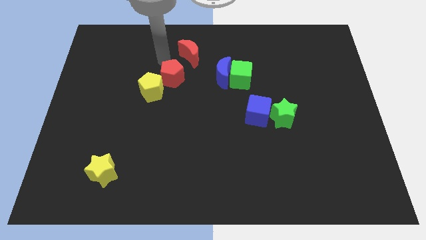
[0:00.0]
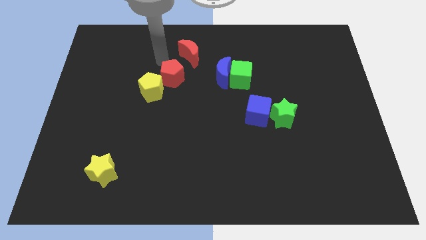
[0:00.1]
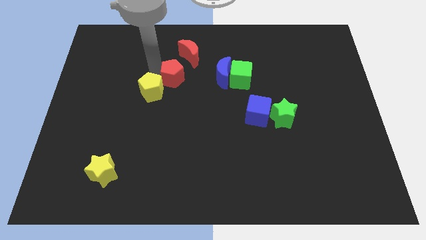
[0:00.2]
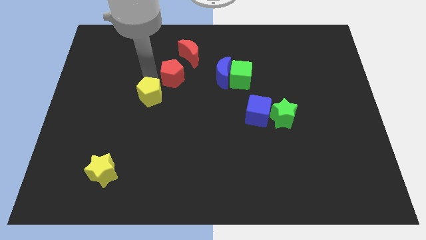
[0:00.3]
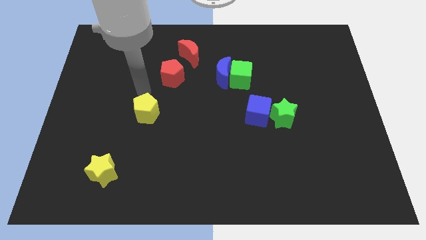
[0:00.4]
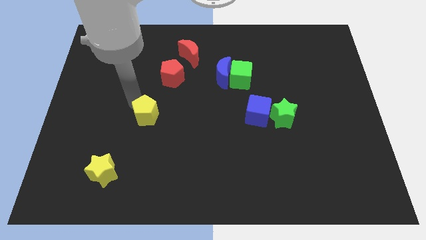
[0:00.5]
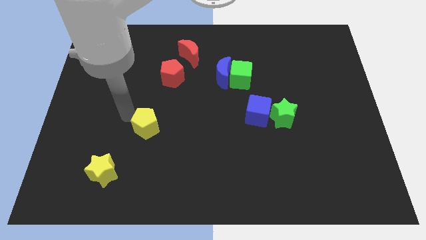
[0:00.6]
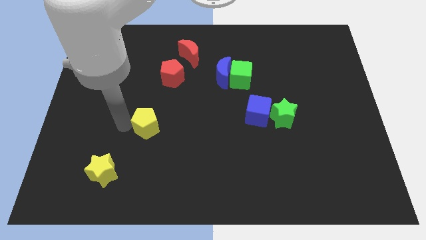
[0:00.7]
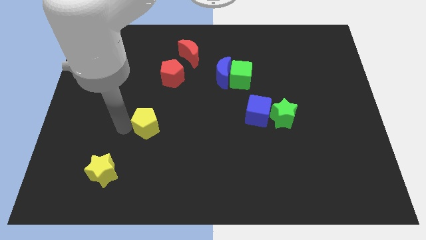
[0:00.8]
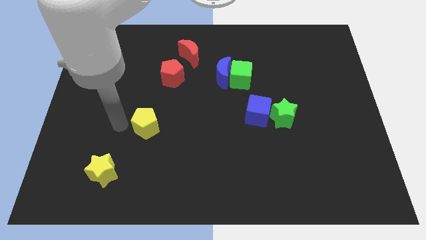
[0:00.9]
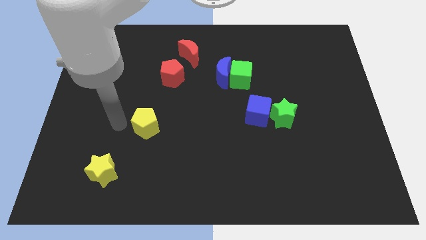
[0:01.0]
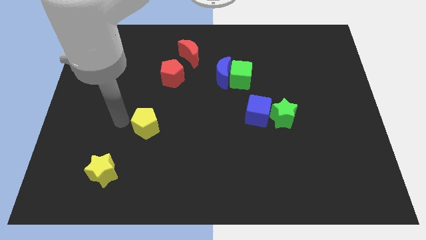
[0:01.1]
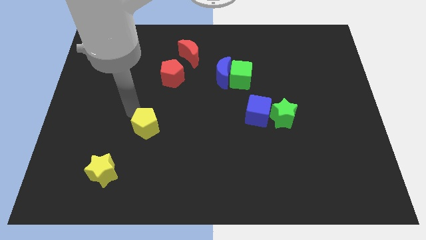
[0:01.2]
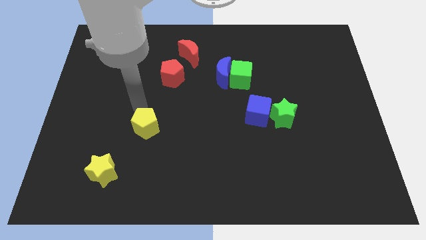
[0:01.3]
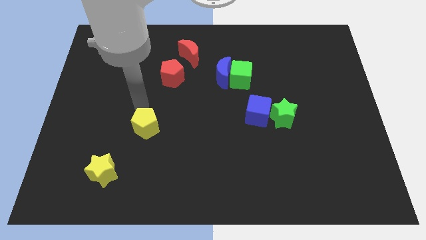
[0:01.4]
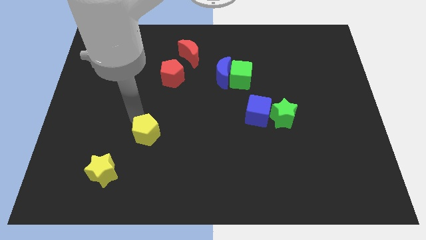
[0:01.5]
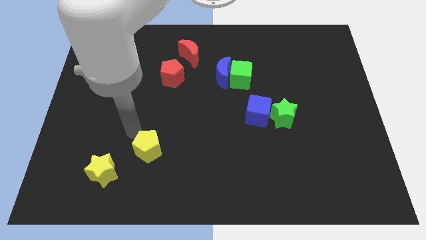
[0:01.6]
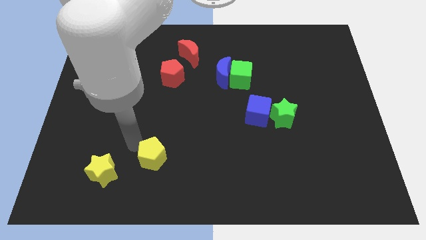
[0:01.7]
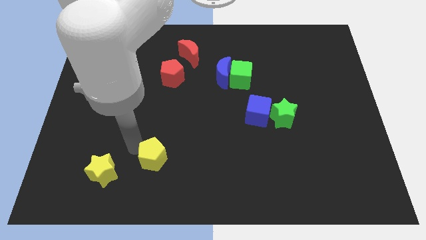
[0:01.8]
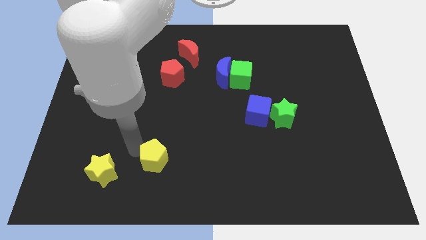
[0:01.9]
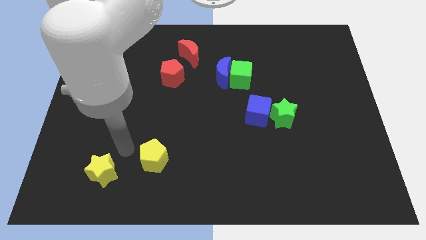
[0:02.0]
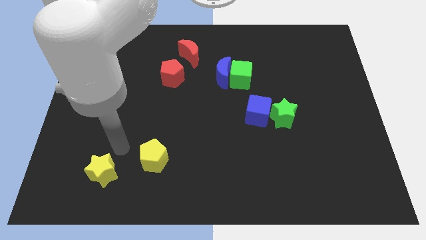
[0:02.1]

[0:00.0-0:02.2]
move the yellow pentagon towards the bottom center of the board

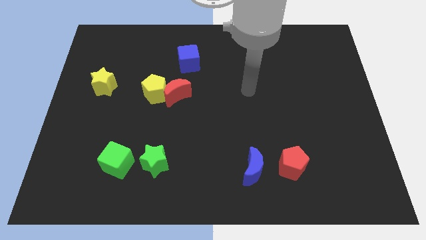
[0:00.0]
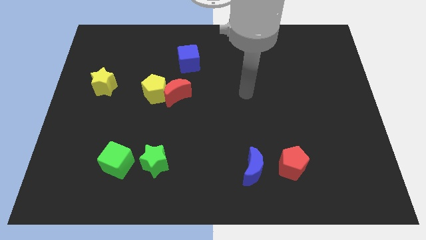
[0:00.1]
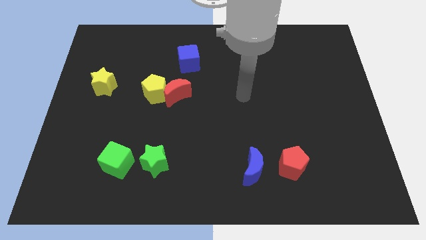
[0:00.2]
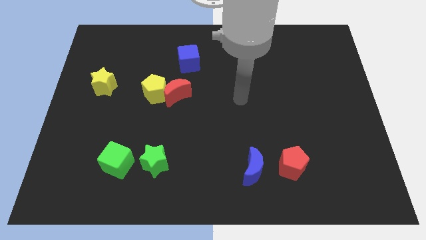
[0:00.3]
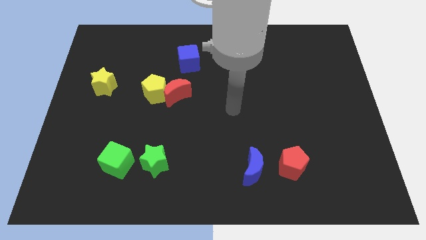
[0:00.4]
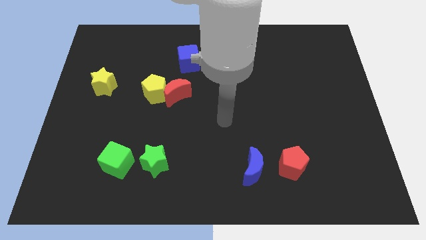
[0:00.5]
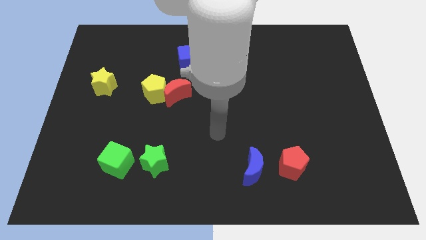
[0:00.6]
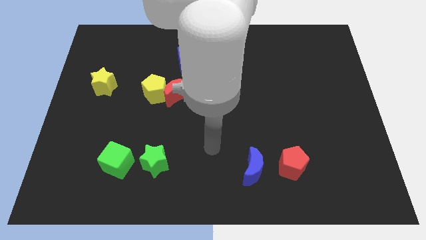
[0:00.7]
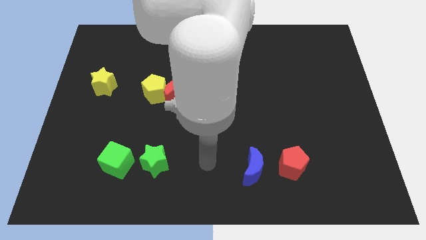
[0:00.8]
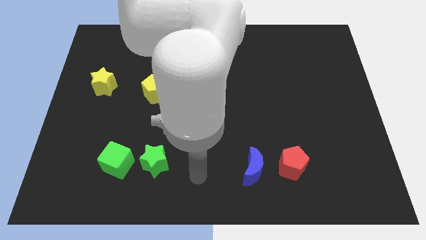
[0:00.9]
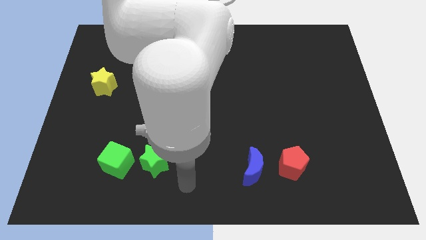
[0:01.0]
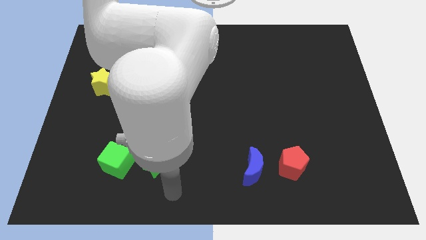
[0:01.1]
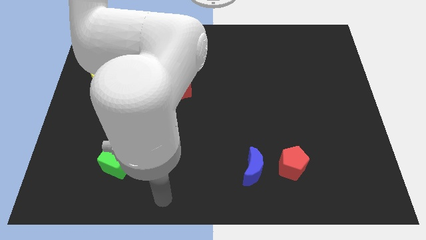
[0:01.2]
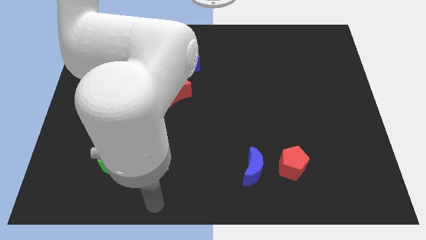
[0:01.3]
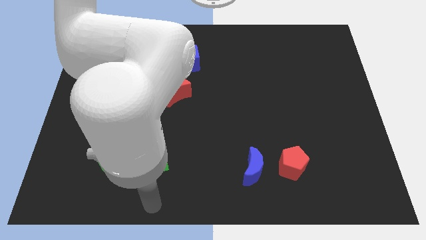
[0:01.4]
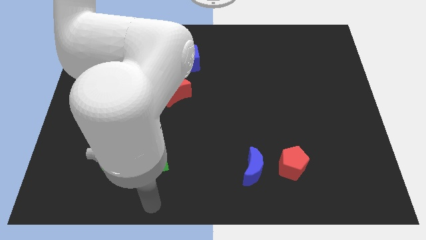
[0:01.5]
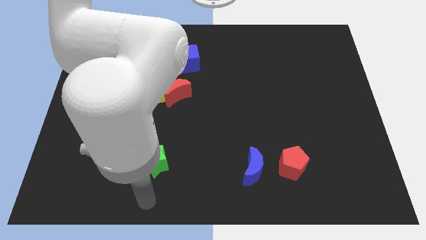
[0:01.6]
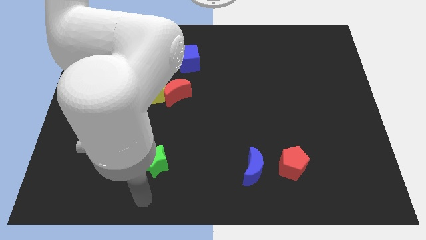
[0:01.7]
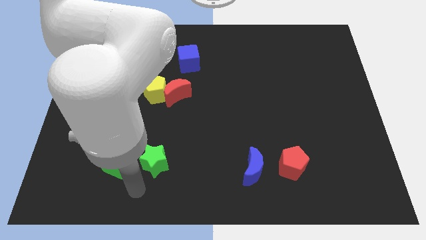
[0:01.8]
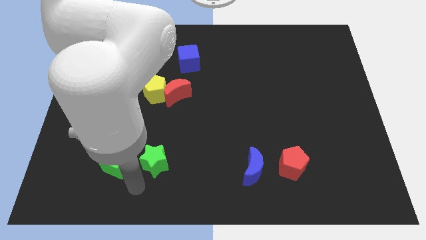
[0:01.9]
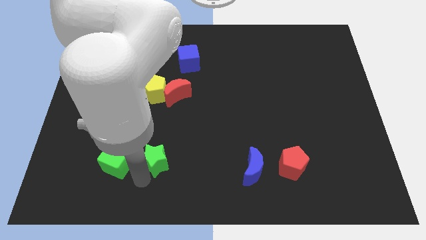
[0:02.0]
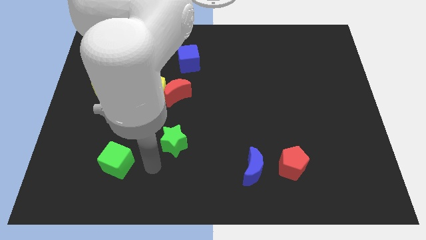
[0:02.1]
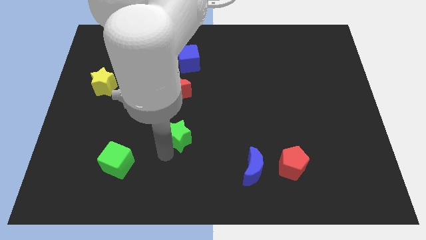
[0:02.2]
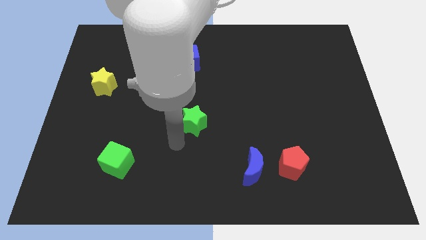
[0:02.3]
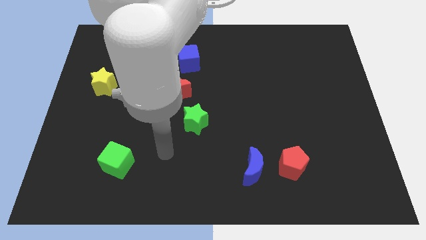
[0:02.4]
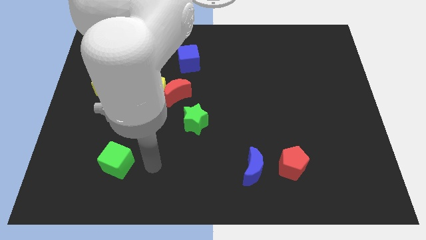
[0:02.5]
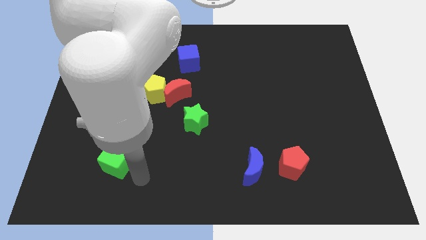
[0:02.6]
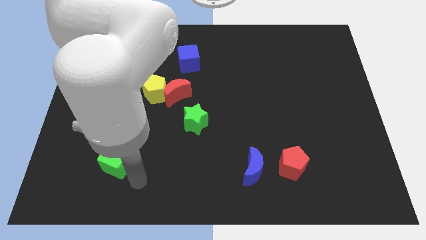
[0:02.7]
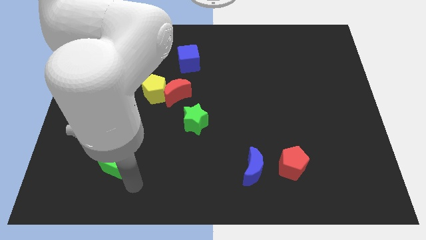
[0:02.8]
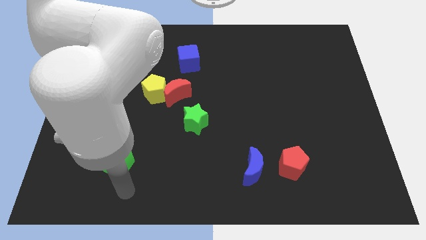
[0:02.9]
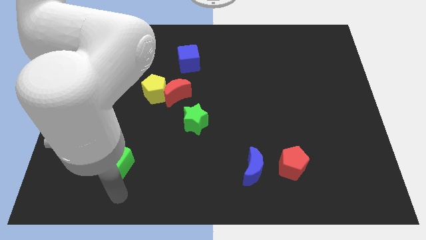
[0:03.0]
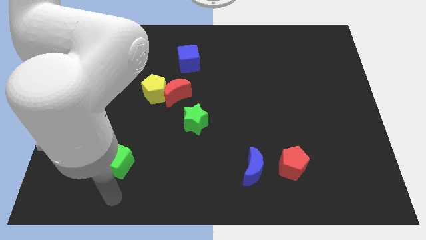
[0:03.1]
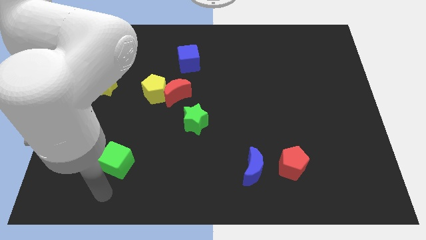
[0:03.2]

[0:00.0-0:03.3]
push the green star towards the center of the board

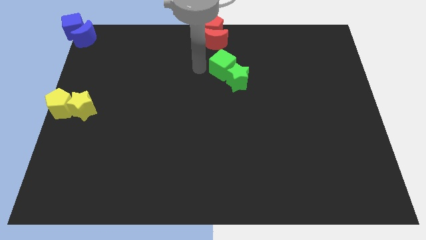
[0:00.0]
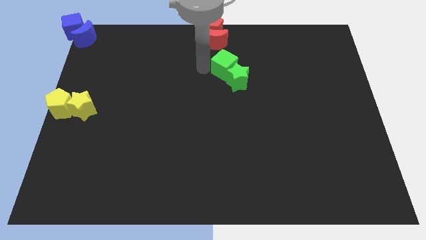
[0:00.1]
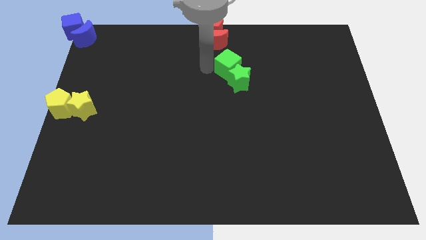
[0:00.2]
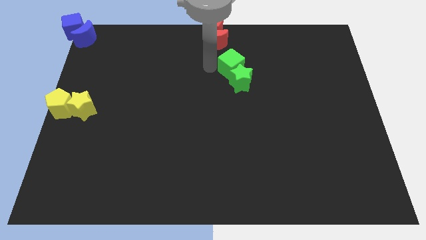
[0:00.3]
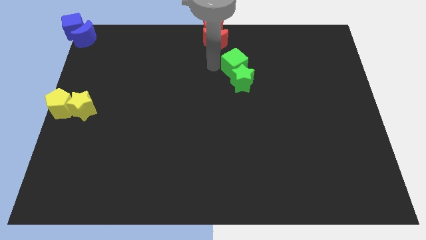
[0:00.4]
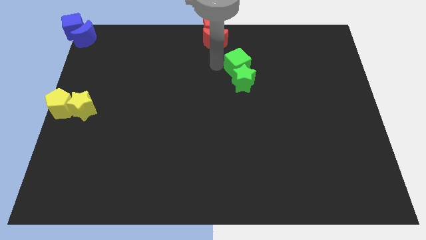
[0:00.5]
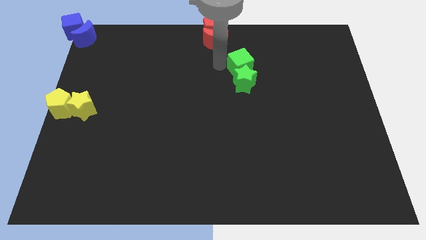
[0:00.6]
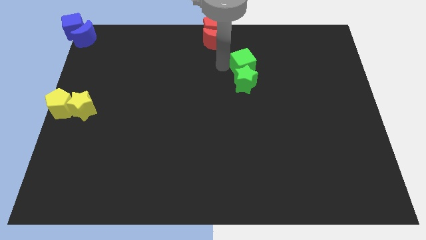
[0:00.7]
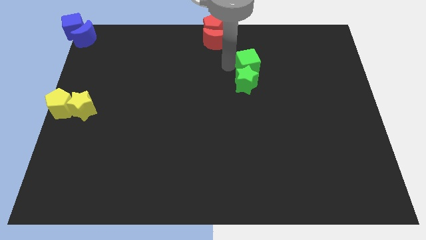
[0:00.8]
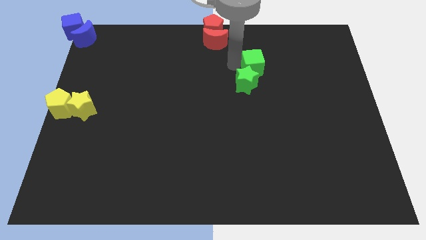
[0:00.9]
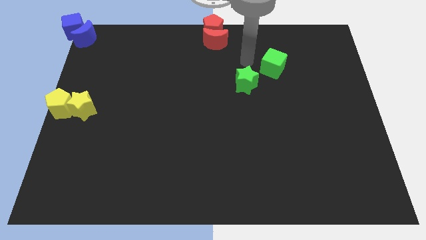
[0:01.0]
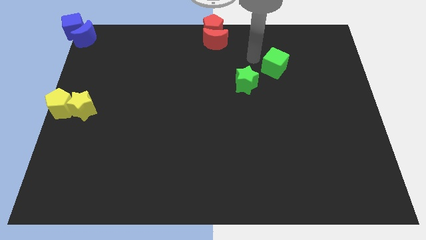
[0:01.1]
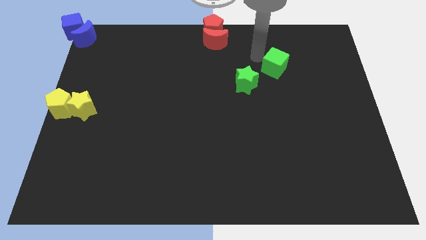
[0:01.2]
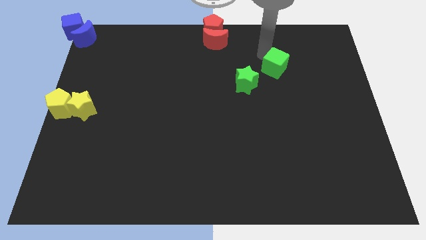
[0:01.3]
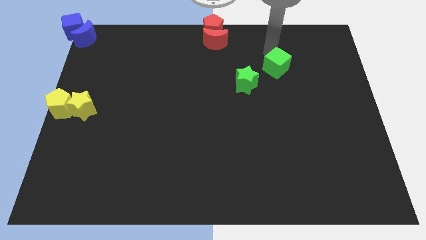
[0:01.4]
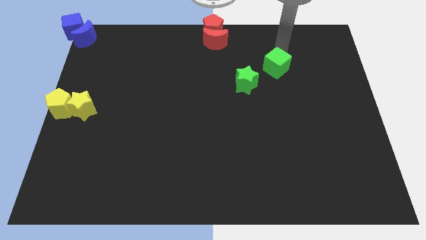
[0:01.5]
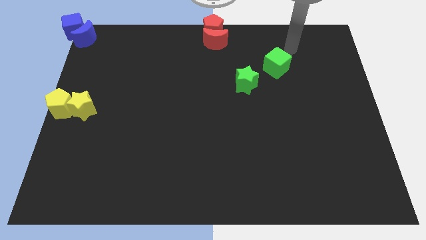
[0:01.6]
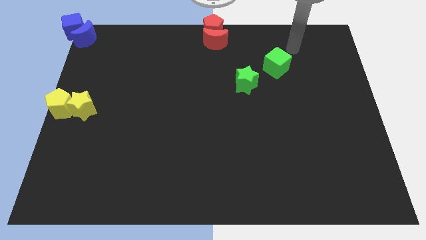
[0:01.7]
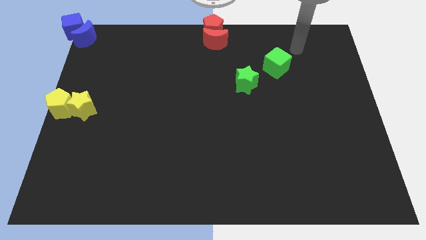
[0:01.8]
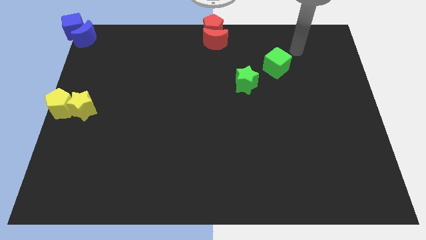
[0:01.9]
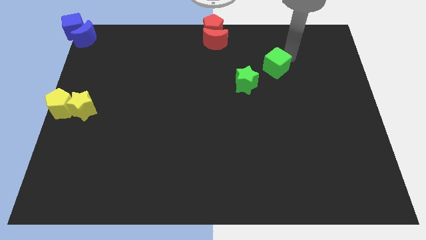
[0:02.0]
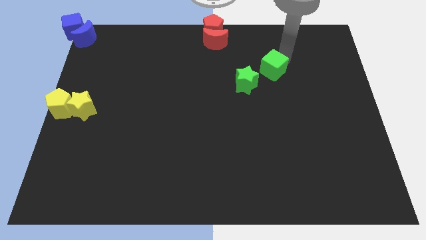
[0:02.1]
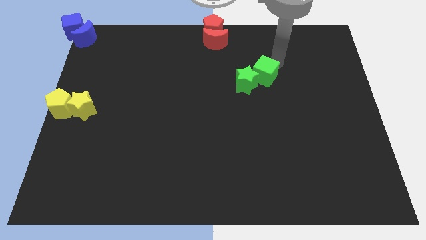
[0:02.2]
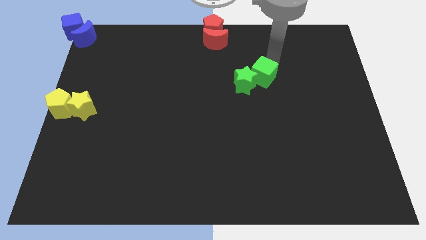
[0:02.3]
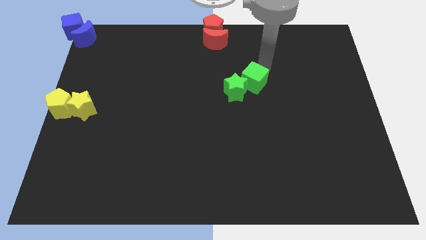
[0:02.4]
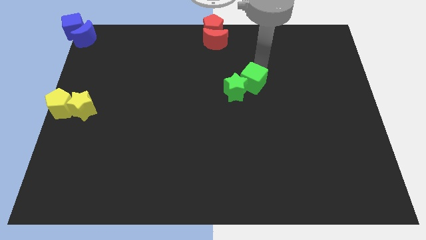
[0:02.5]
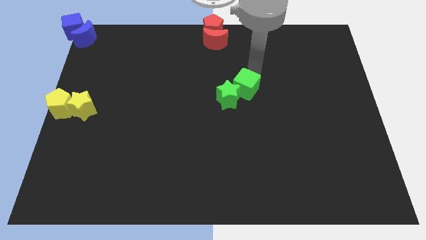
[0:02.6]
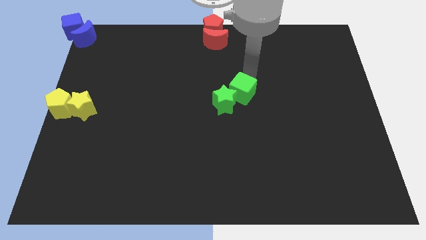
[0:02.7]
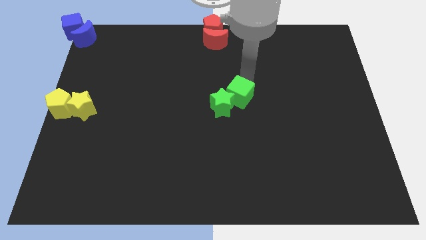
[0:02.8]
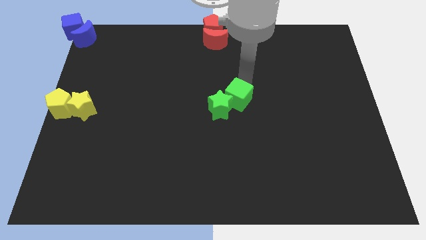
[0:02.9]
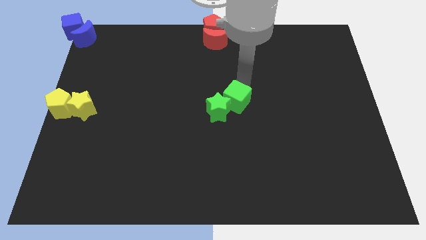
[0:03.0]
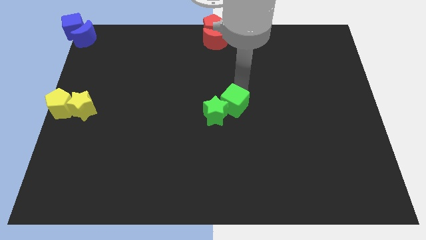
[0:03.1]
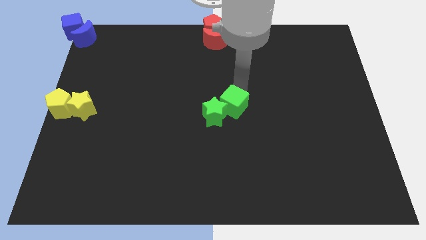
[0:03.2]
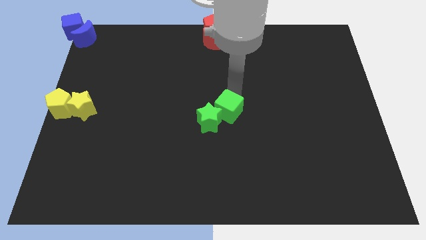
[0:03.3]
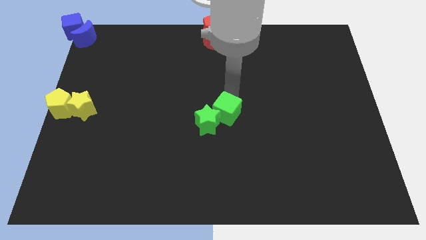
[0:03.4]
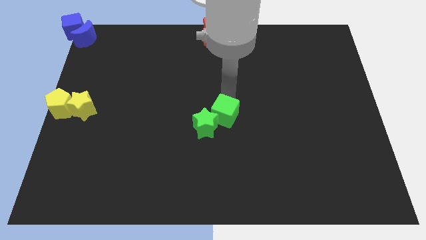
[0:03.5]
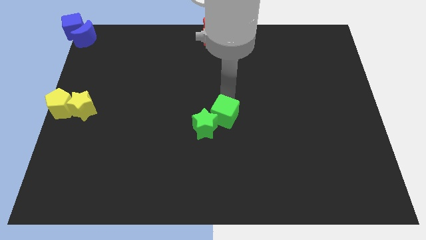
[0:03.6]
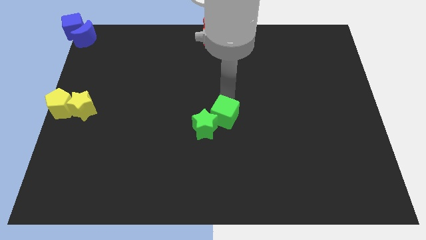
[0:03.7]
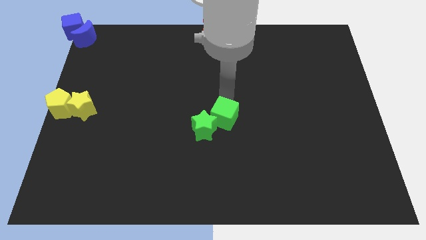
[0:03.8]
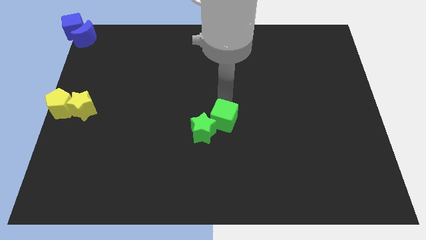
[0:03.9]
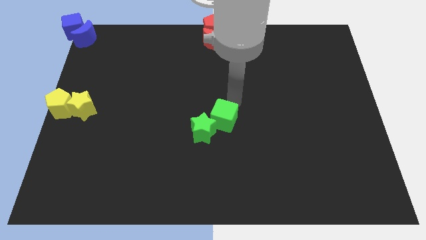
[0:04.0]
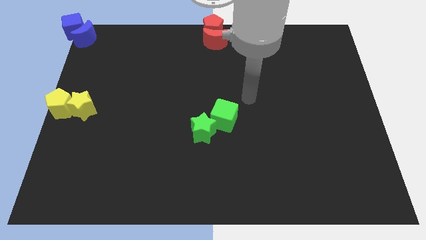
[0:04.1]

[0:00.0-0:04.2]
push the green star and cube to the center of the board
